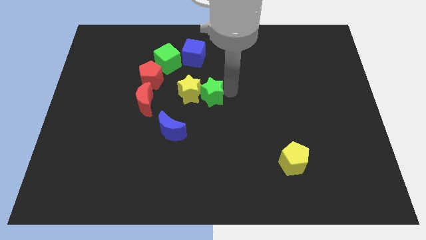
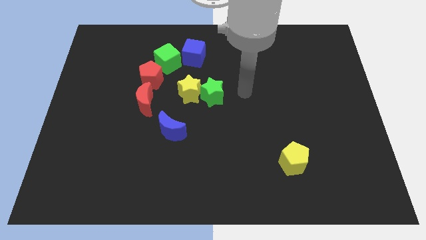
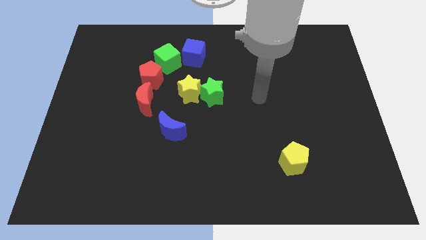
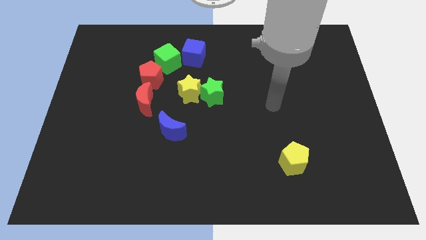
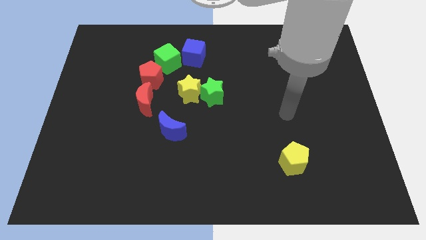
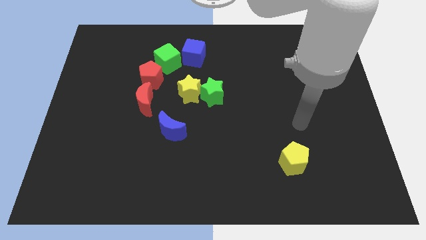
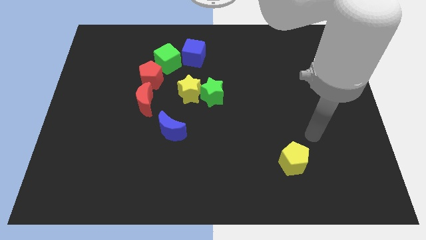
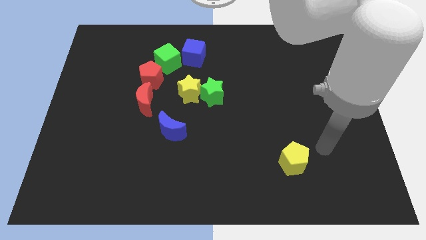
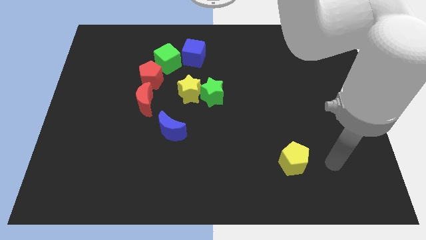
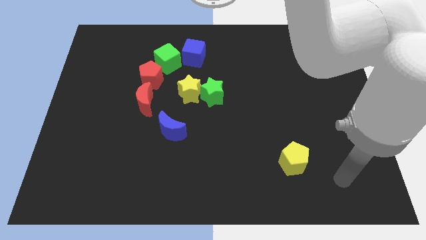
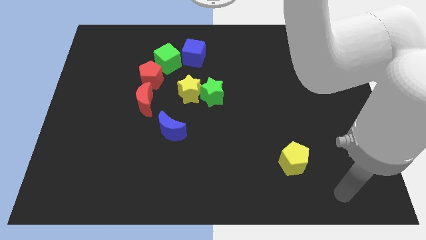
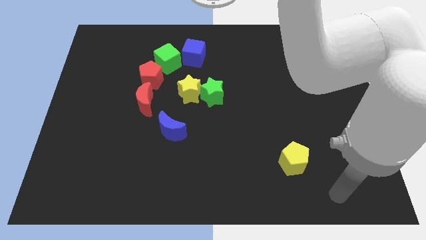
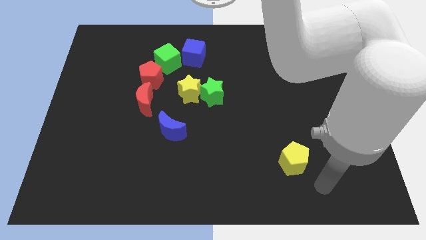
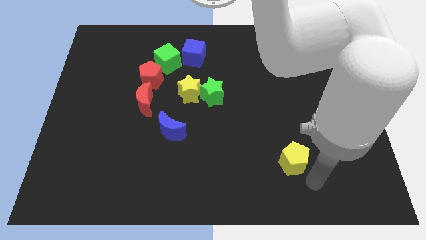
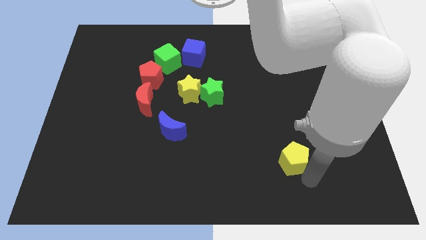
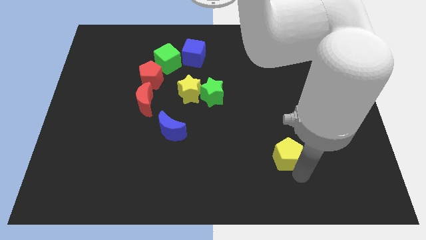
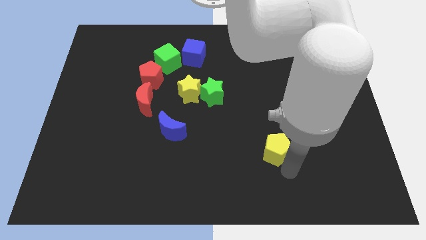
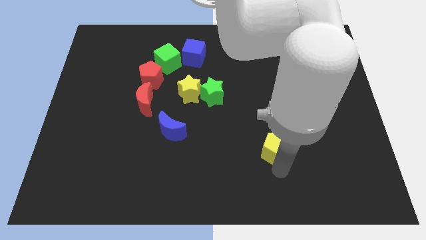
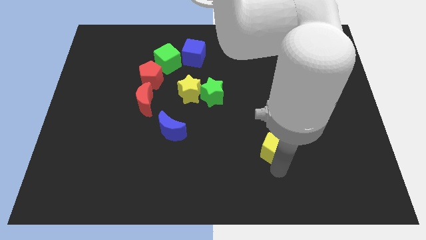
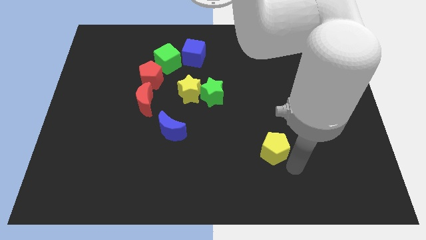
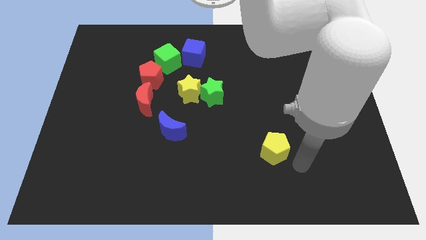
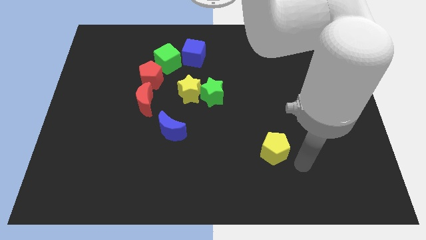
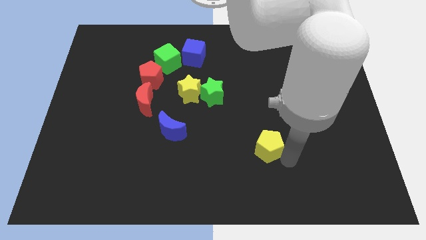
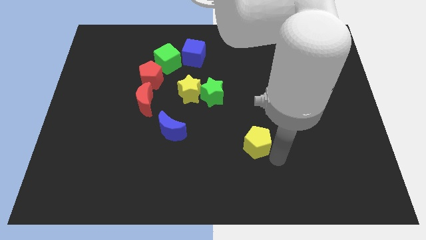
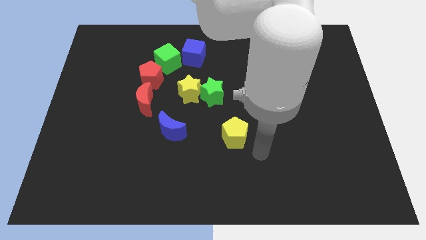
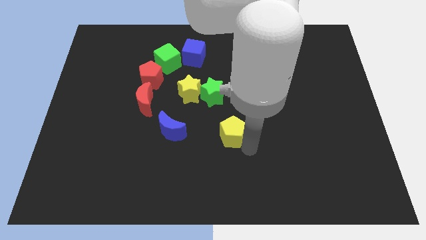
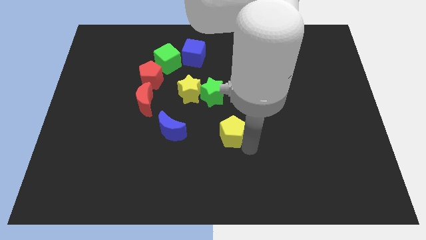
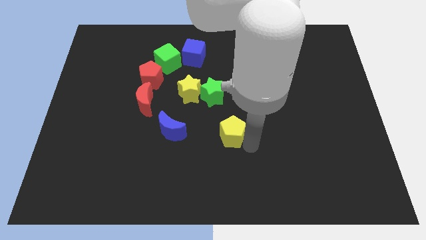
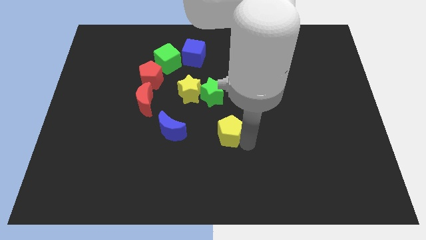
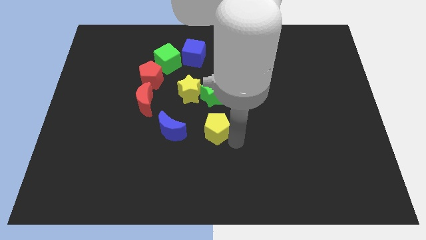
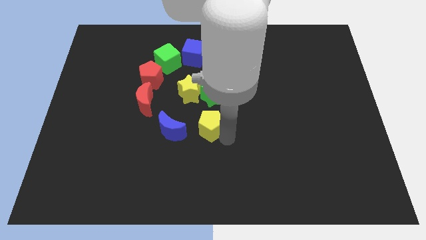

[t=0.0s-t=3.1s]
push yellow pentagon below green star

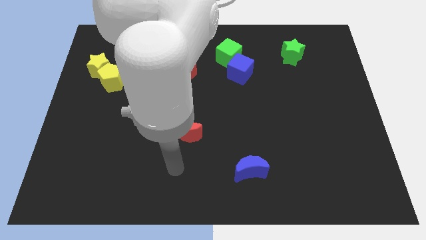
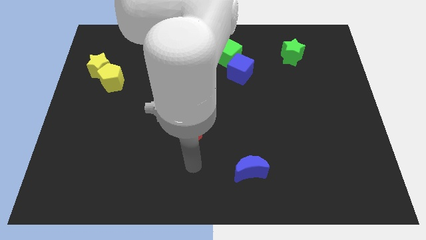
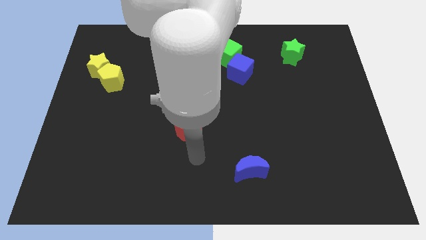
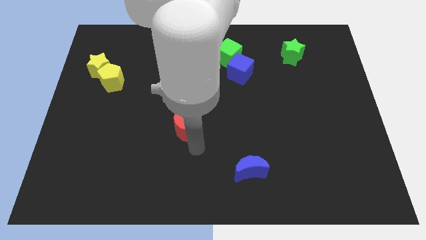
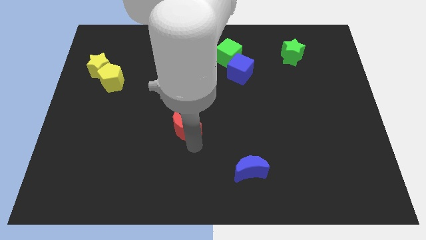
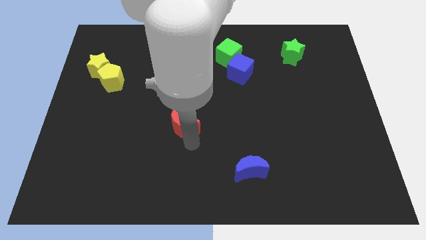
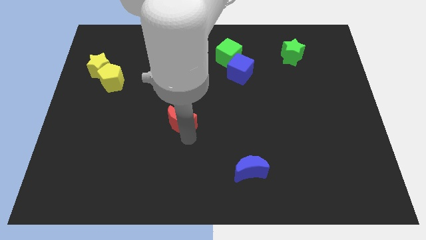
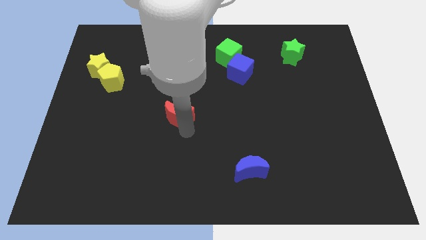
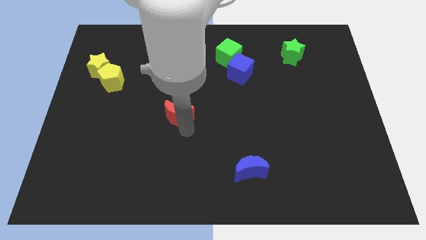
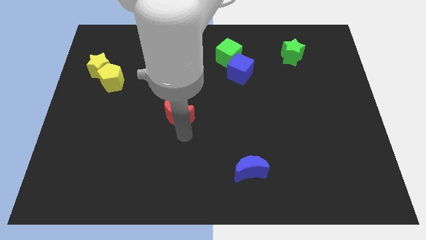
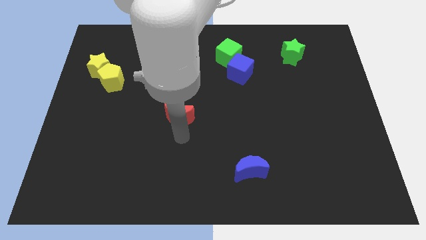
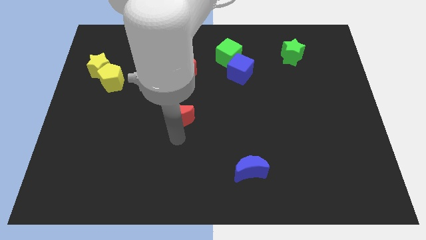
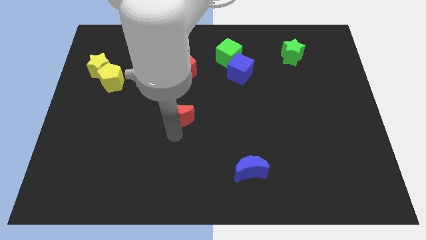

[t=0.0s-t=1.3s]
slightly push the red crescent to the center of the board

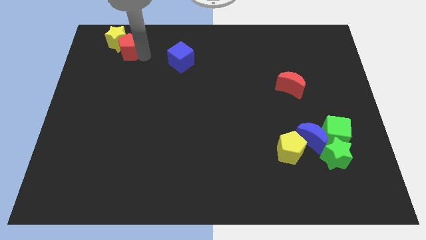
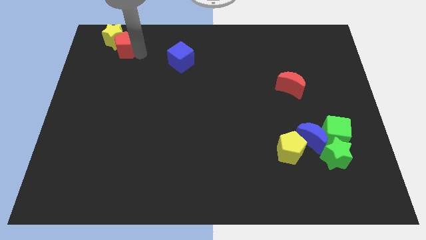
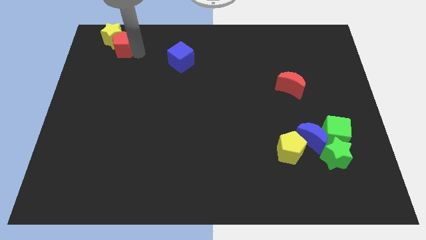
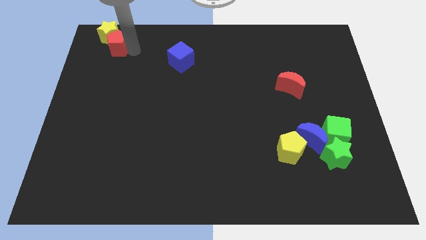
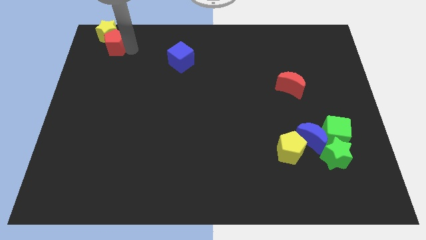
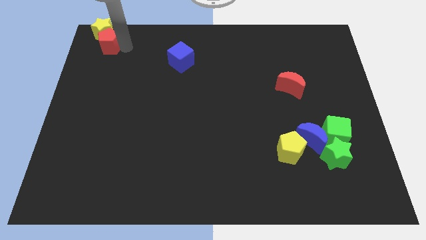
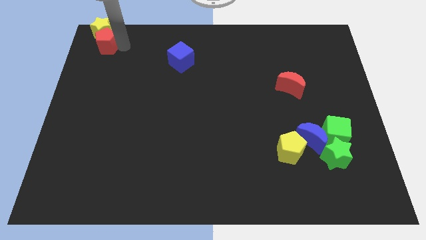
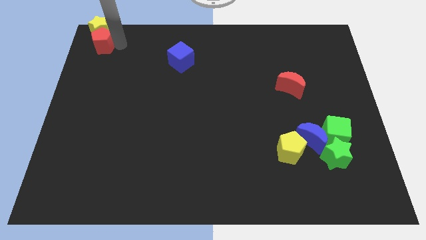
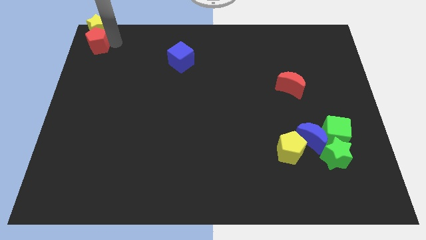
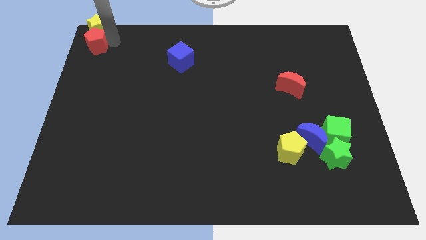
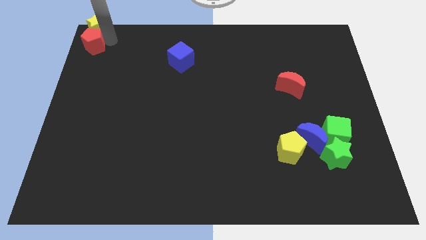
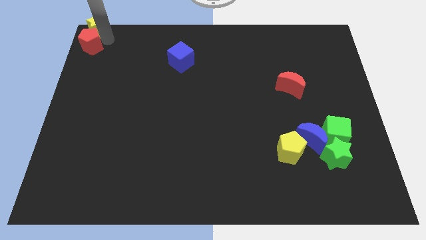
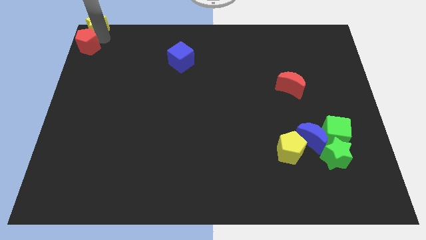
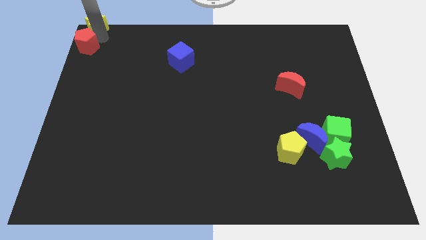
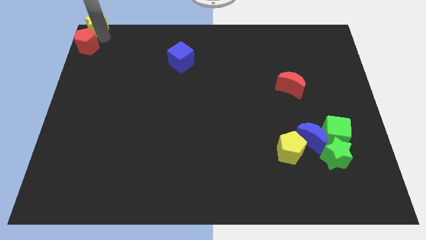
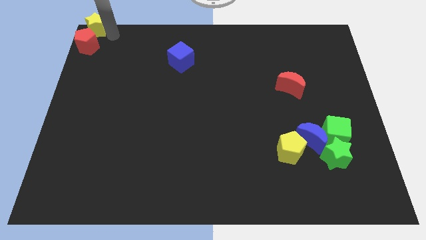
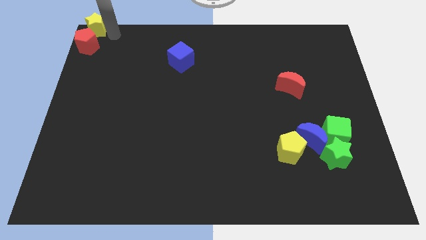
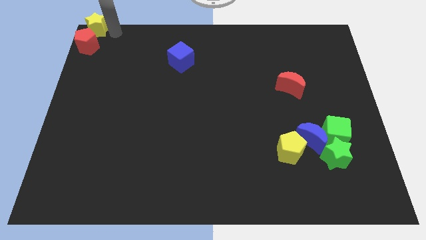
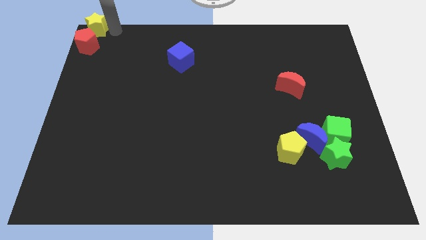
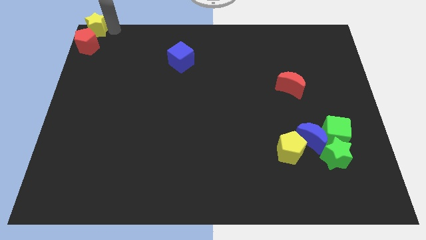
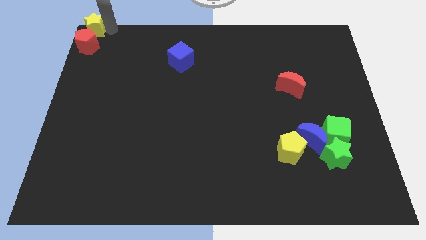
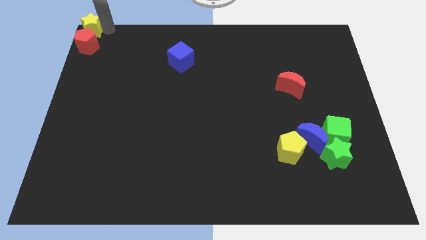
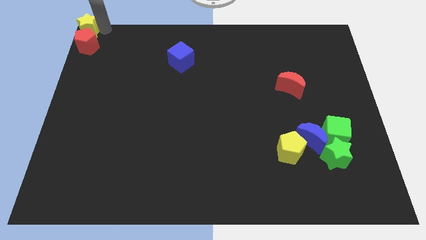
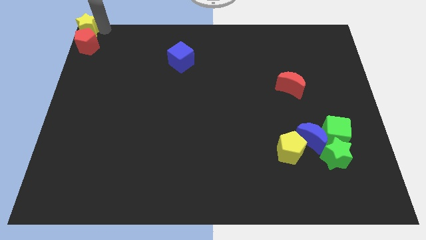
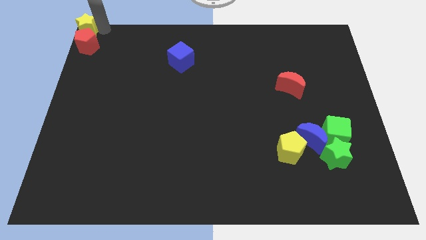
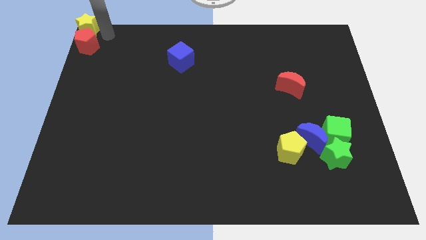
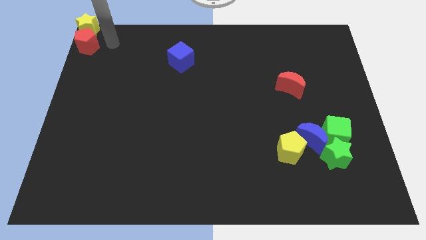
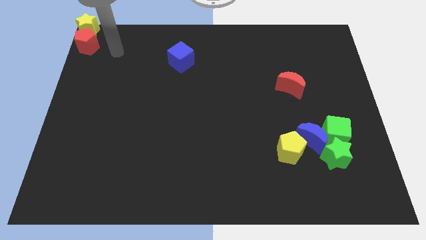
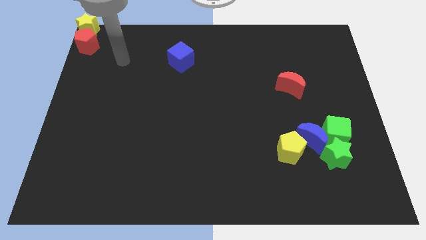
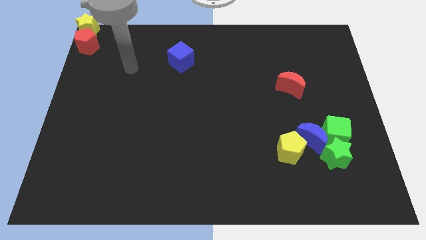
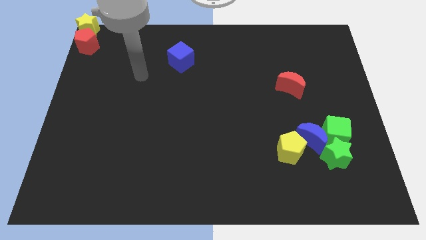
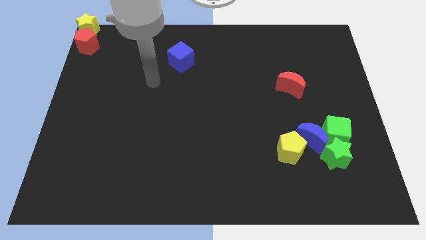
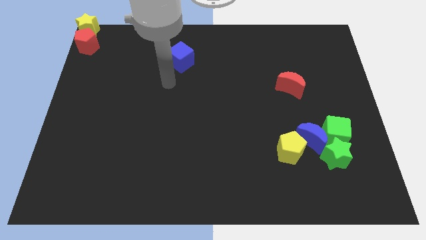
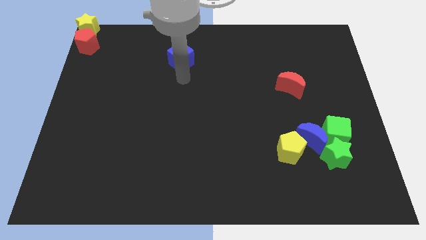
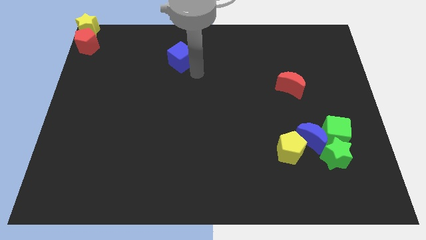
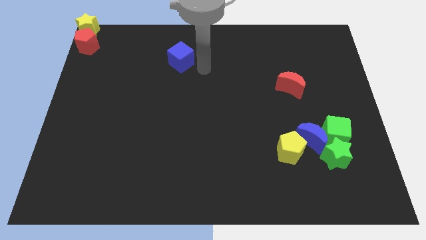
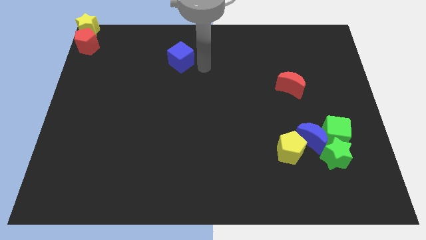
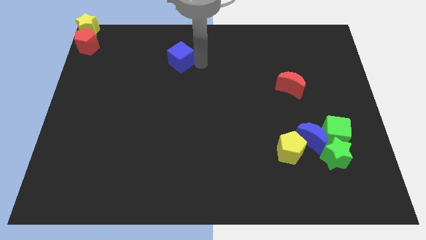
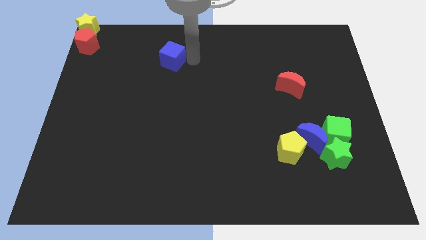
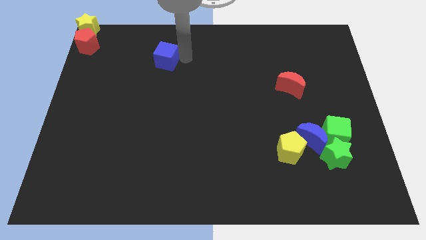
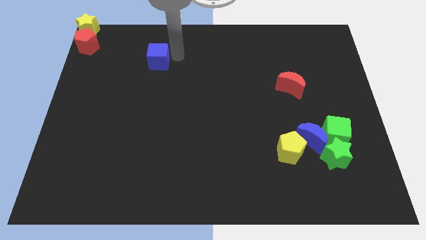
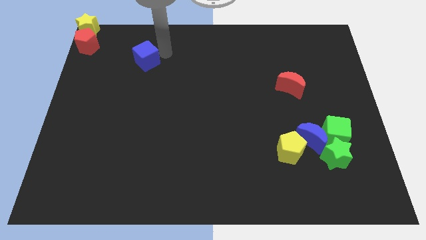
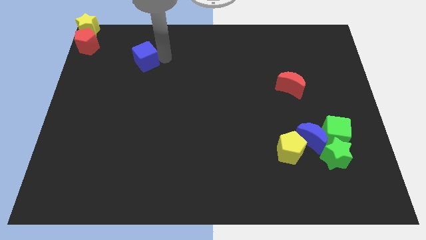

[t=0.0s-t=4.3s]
place the red pentagon below the yellow star

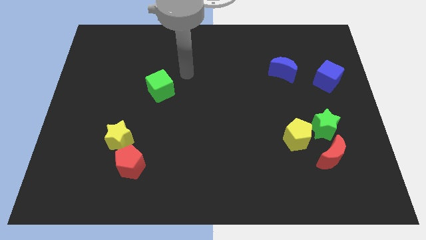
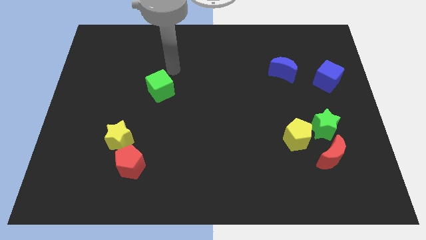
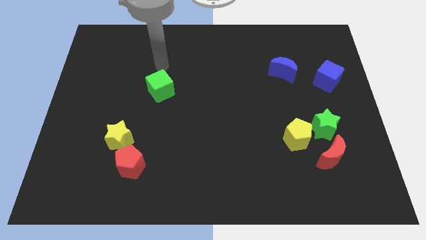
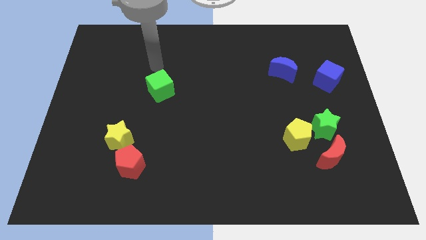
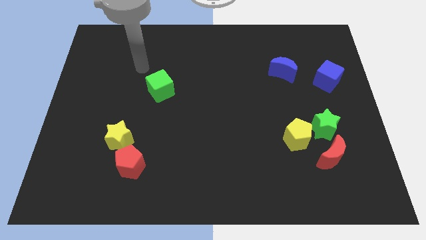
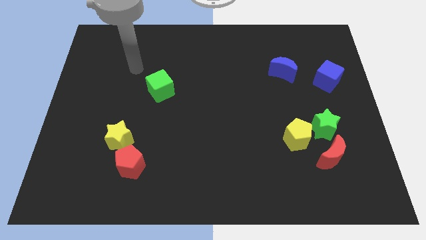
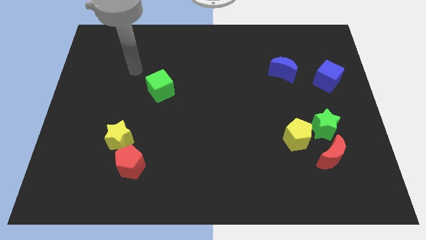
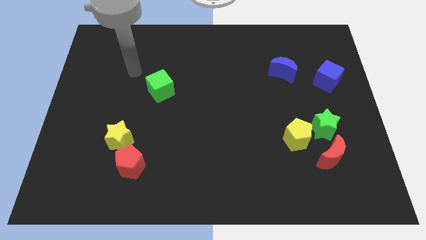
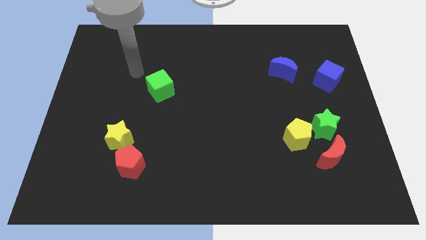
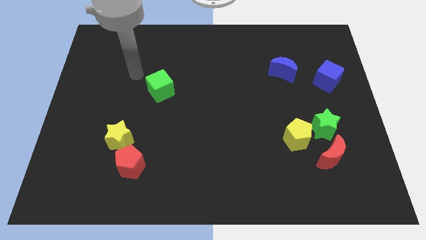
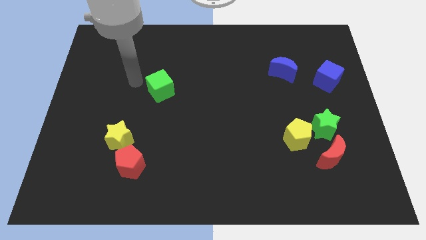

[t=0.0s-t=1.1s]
move your arm to the left of green cube
